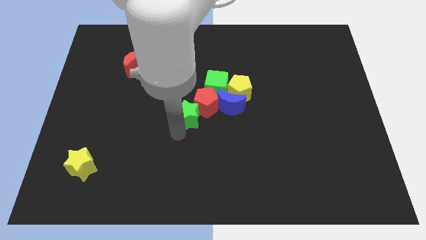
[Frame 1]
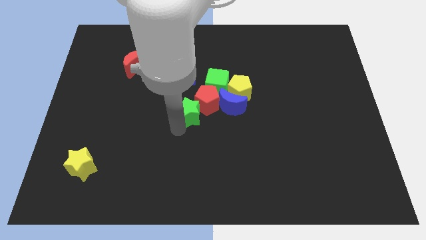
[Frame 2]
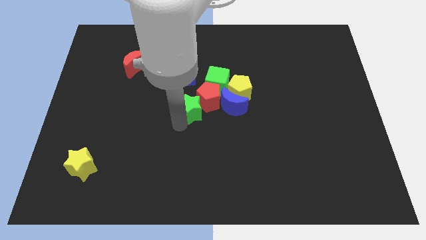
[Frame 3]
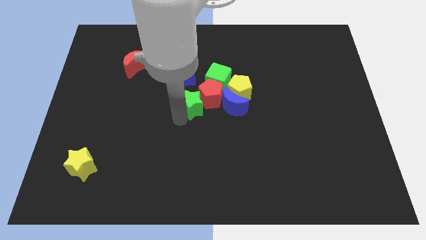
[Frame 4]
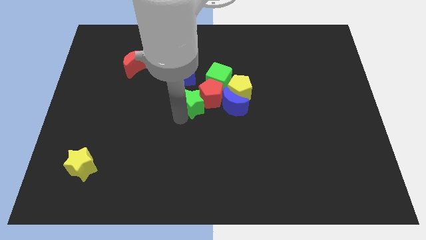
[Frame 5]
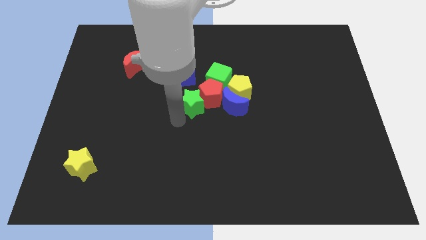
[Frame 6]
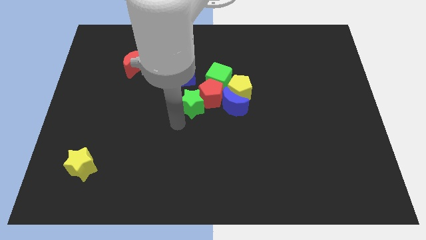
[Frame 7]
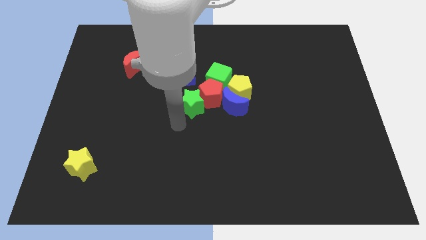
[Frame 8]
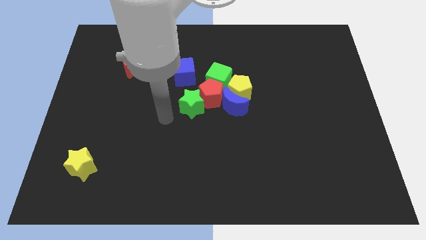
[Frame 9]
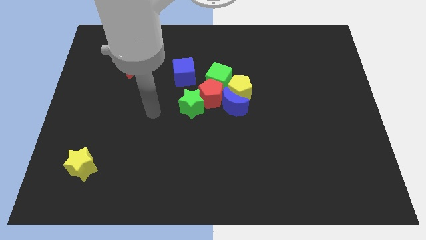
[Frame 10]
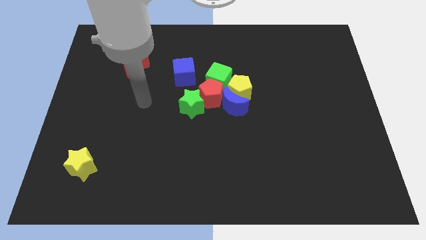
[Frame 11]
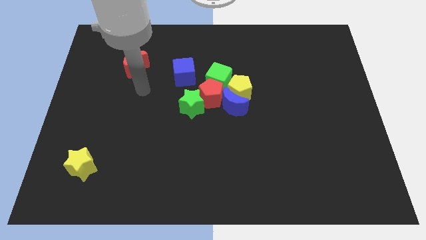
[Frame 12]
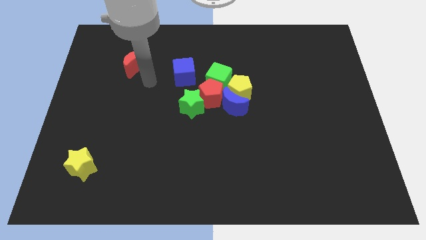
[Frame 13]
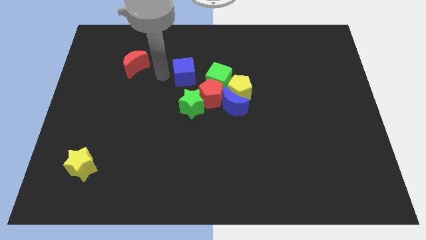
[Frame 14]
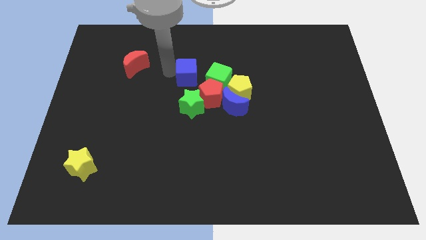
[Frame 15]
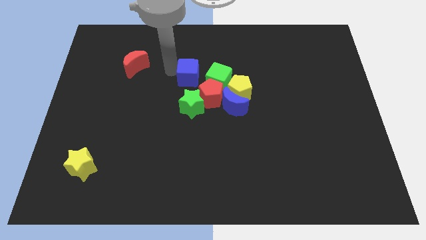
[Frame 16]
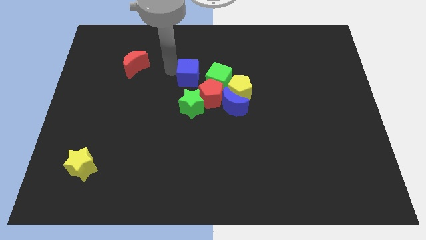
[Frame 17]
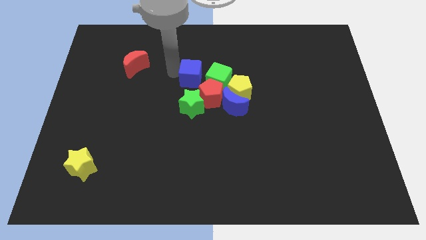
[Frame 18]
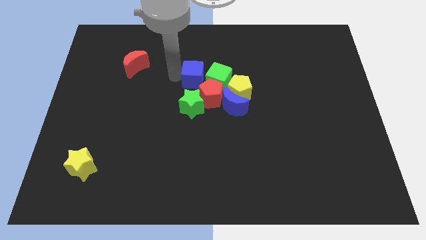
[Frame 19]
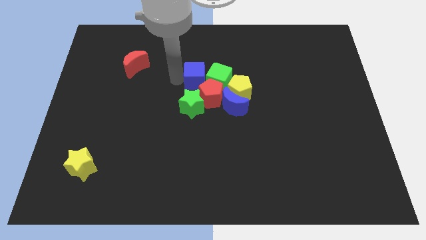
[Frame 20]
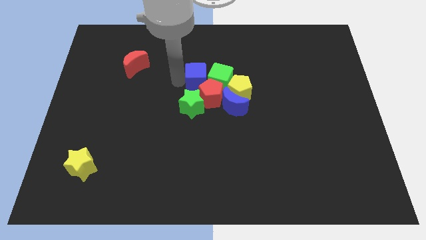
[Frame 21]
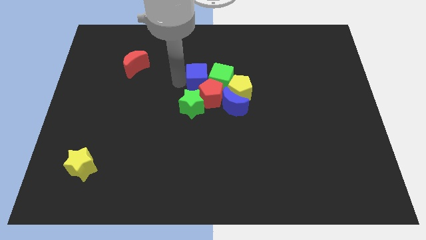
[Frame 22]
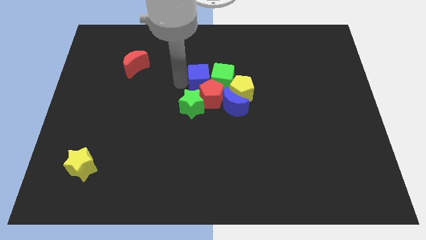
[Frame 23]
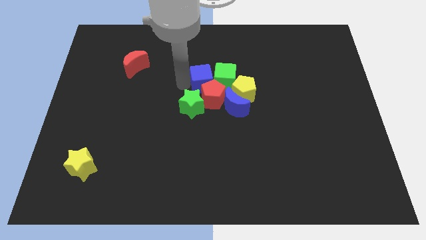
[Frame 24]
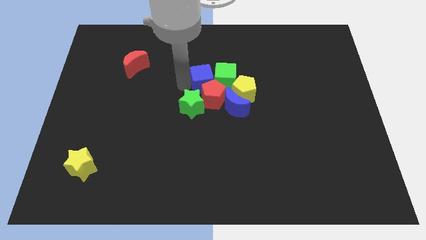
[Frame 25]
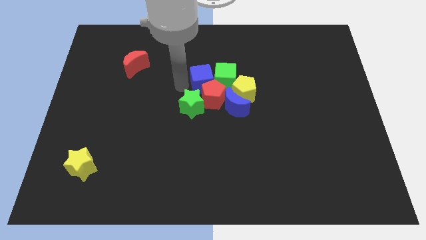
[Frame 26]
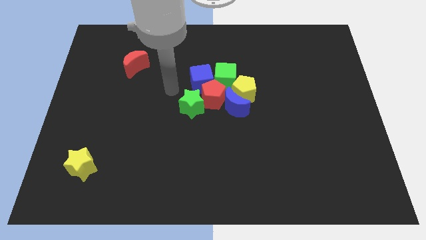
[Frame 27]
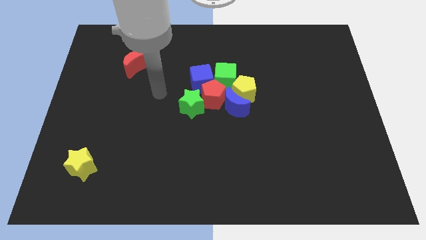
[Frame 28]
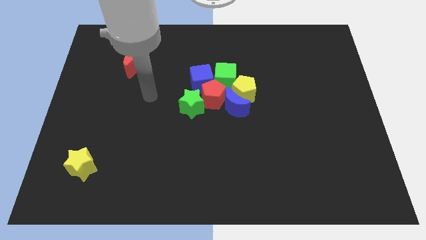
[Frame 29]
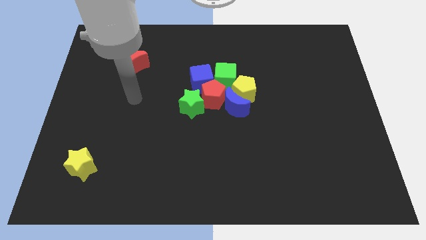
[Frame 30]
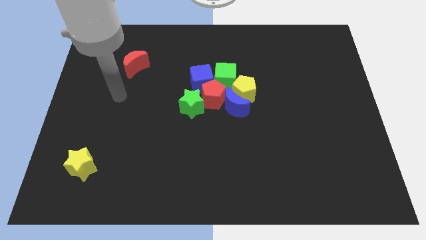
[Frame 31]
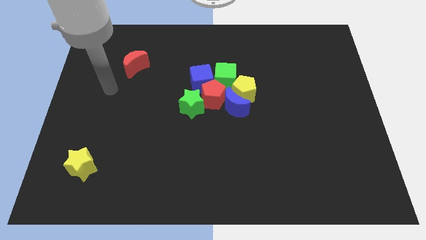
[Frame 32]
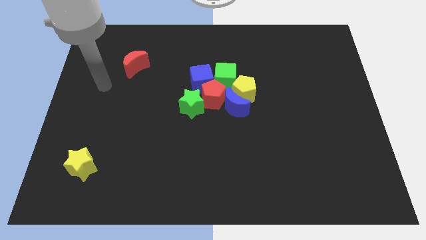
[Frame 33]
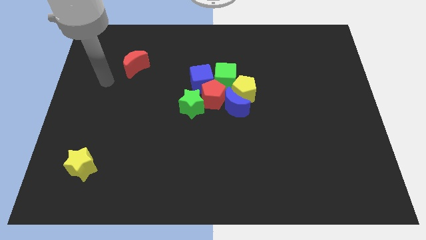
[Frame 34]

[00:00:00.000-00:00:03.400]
move green star and blue cube in center

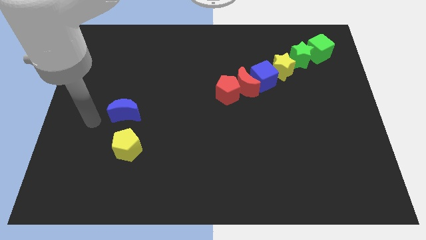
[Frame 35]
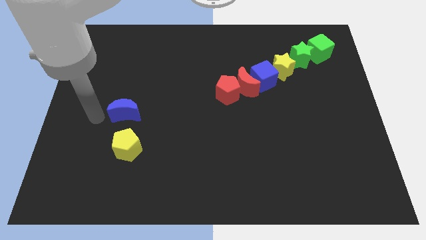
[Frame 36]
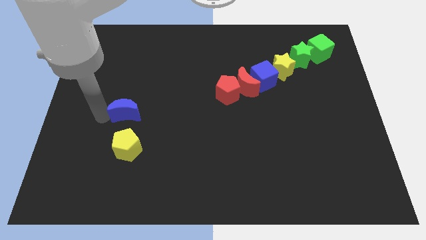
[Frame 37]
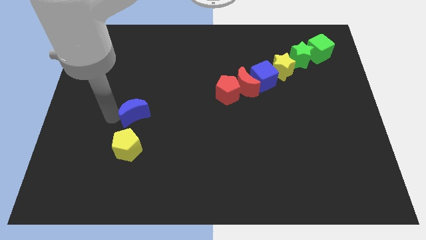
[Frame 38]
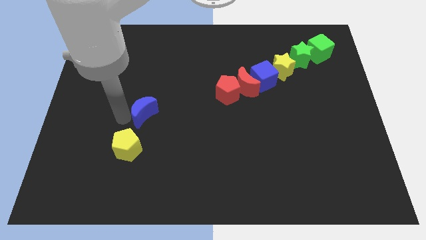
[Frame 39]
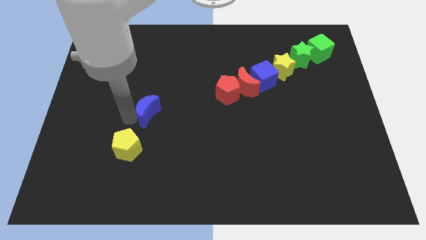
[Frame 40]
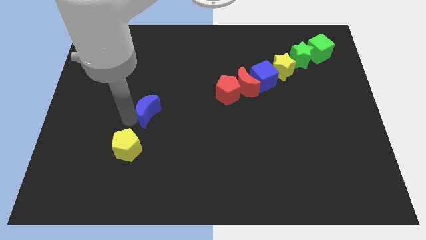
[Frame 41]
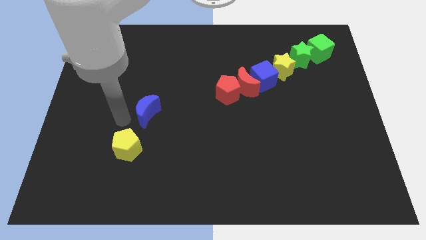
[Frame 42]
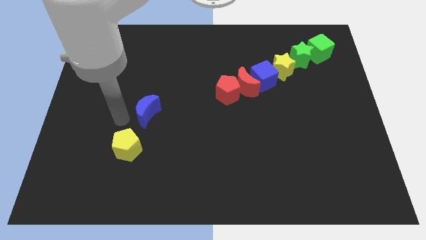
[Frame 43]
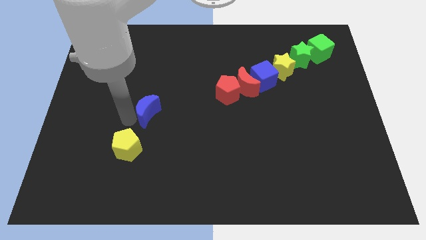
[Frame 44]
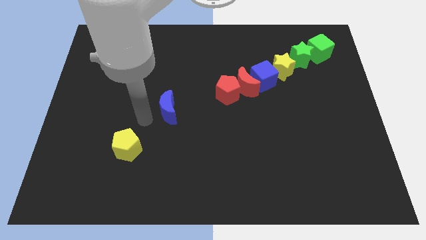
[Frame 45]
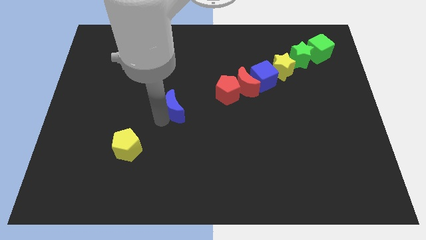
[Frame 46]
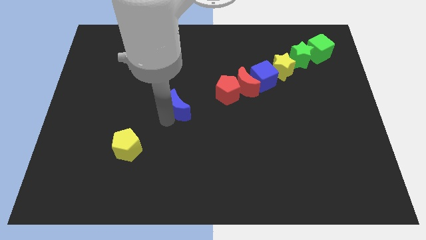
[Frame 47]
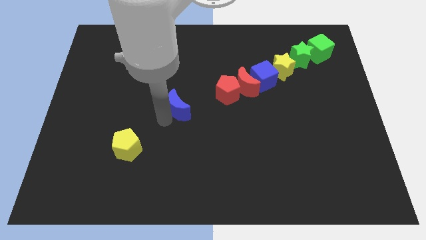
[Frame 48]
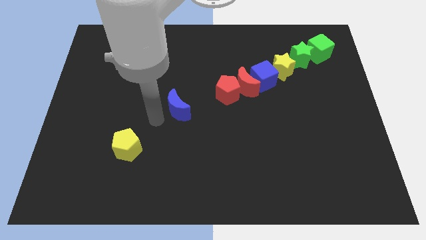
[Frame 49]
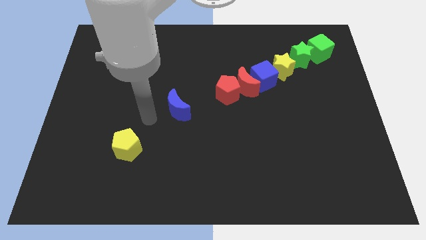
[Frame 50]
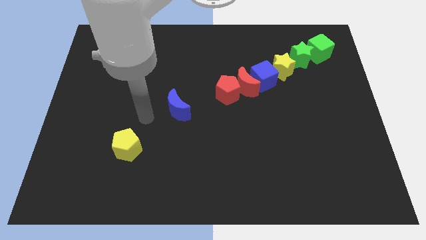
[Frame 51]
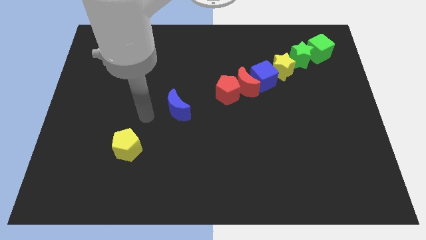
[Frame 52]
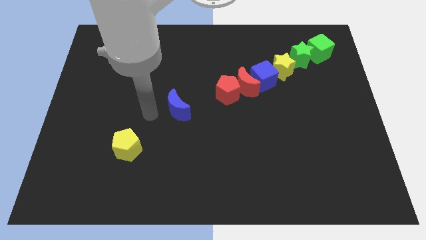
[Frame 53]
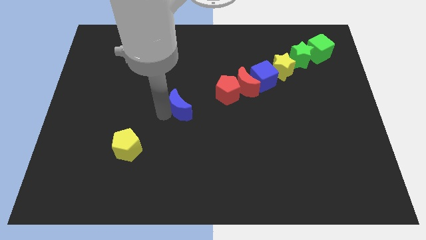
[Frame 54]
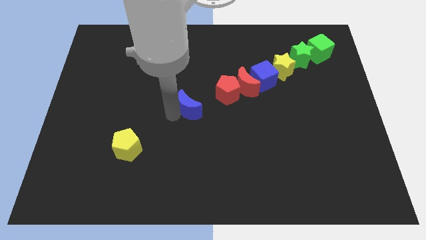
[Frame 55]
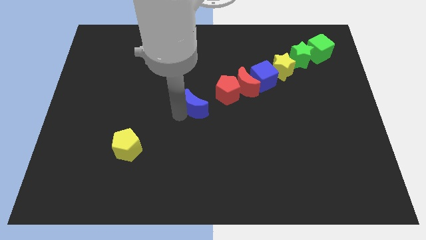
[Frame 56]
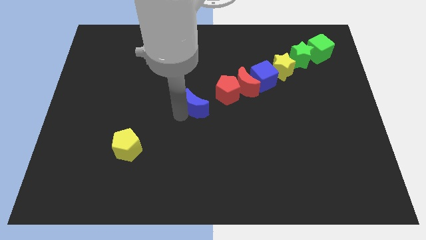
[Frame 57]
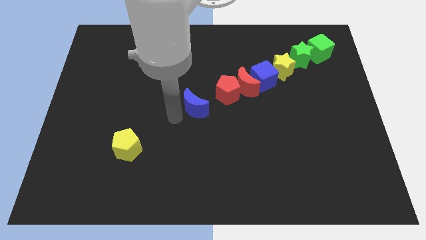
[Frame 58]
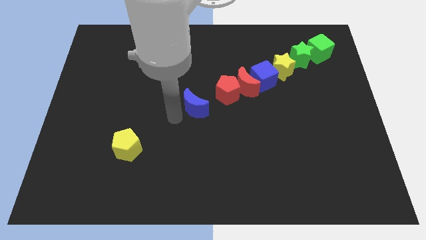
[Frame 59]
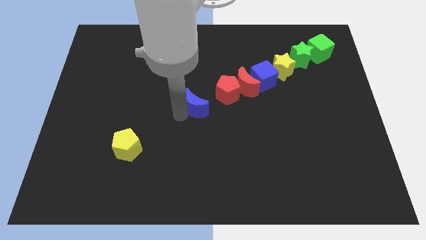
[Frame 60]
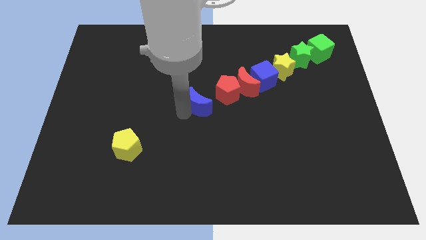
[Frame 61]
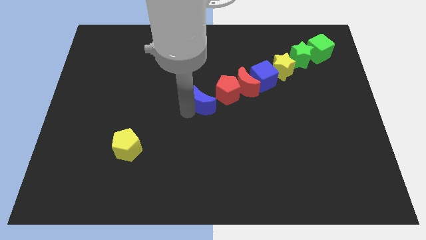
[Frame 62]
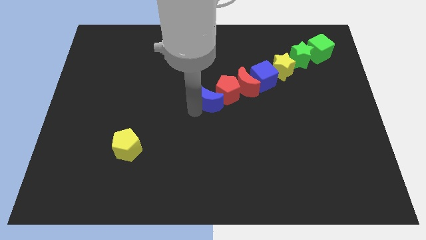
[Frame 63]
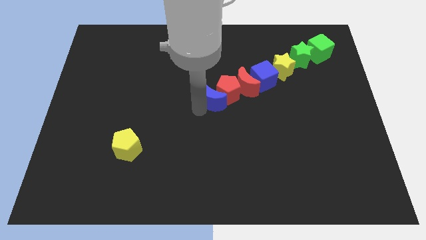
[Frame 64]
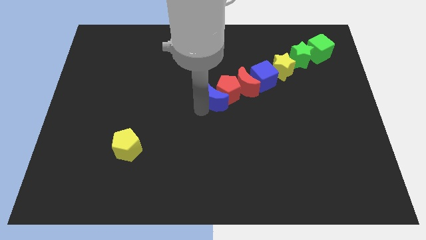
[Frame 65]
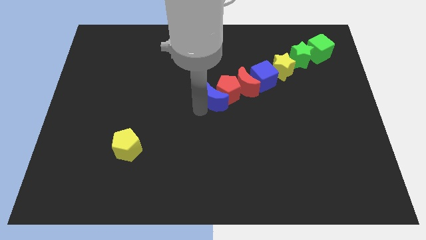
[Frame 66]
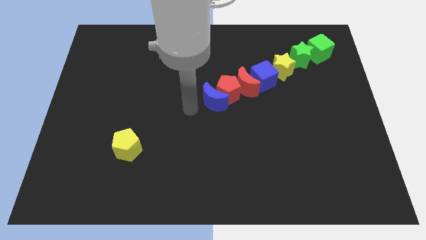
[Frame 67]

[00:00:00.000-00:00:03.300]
push the blue crescent close to the red pentagon

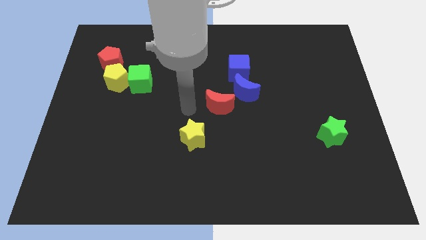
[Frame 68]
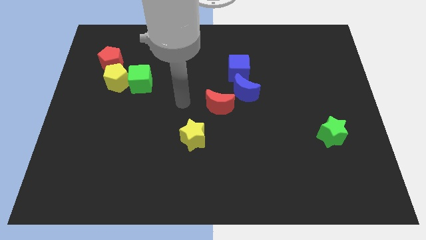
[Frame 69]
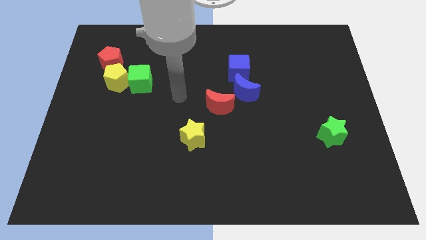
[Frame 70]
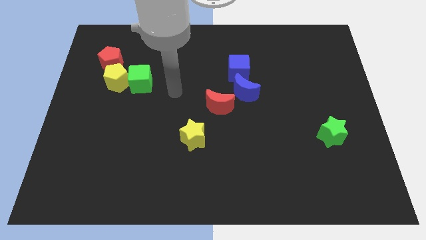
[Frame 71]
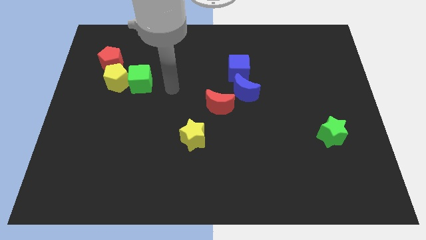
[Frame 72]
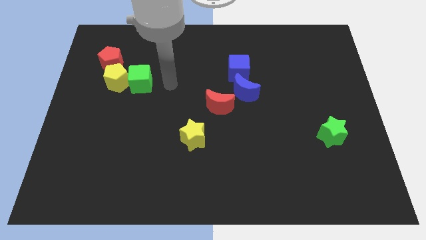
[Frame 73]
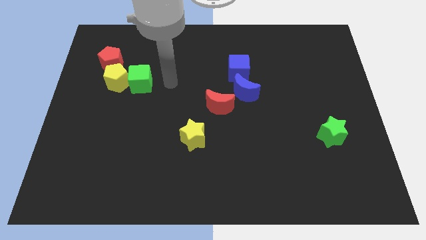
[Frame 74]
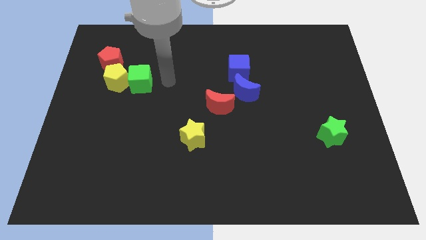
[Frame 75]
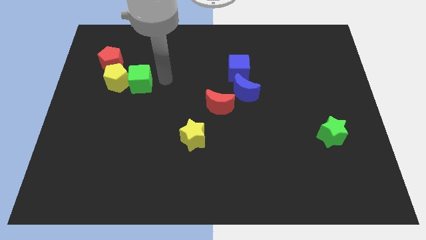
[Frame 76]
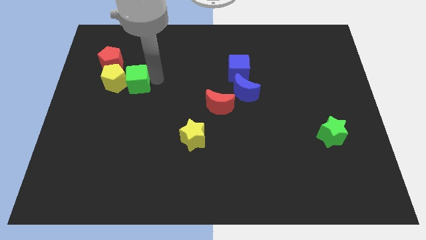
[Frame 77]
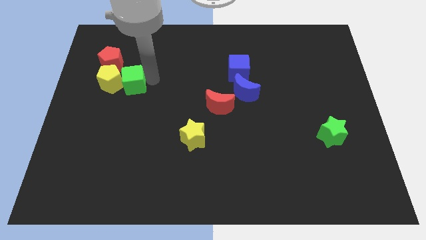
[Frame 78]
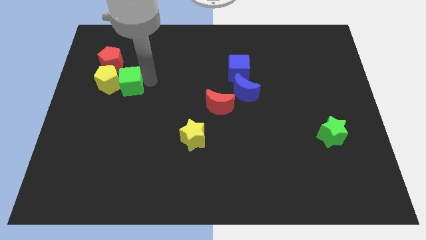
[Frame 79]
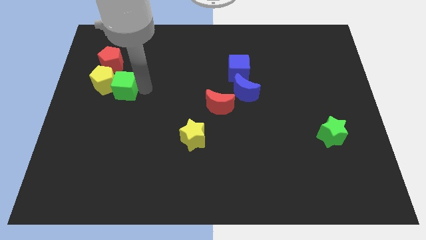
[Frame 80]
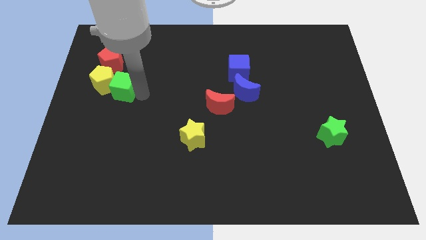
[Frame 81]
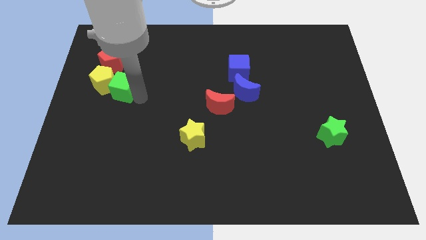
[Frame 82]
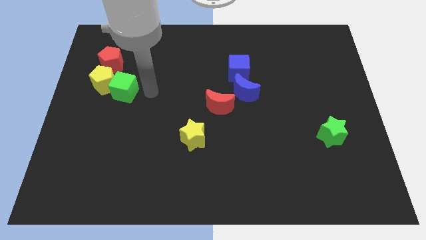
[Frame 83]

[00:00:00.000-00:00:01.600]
move the green cube into the yellow pentagon

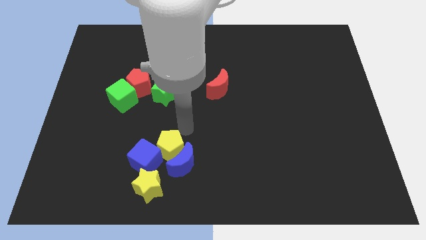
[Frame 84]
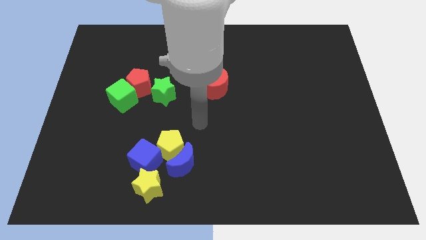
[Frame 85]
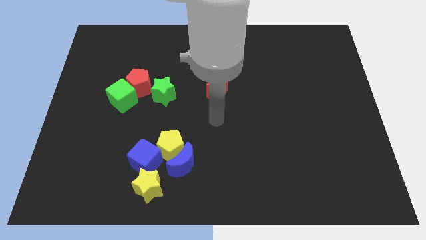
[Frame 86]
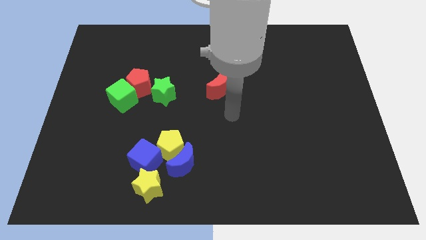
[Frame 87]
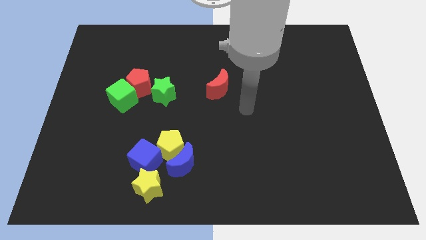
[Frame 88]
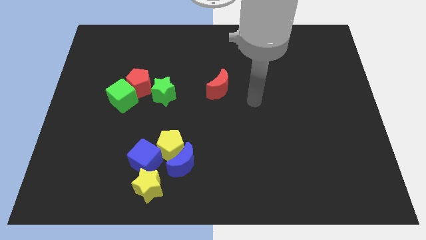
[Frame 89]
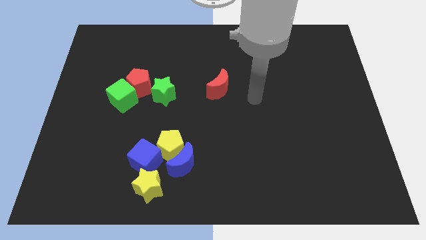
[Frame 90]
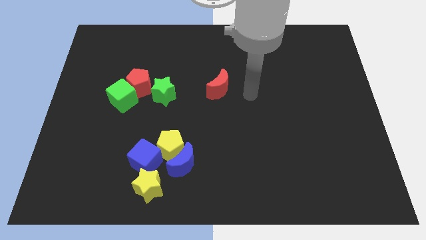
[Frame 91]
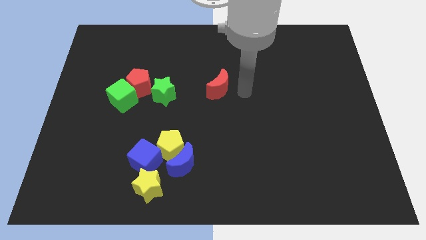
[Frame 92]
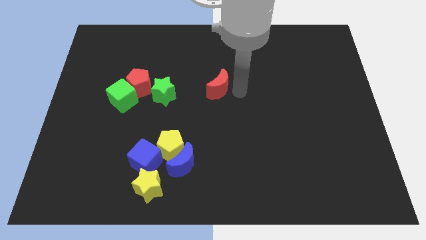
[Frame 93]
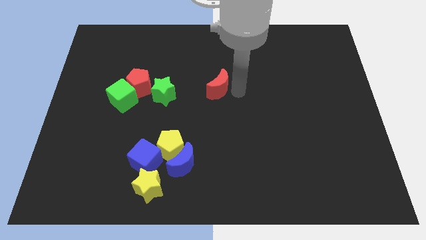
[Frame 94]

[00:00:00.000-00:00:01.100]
point your arm at the right of the red crescent
